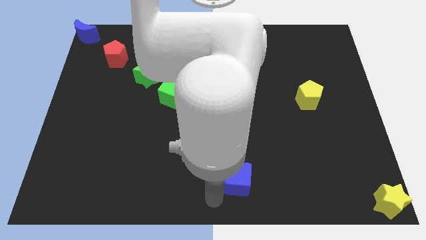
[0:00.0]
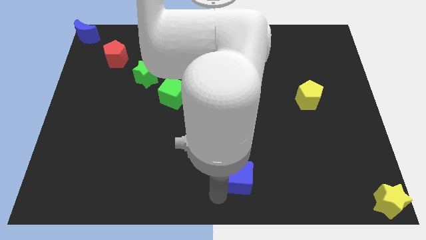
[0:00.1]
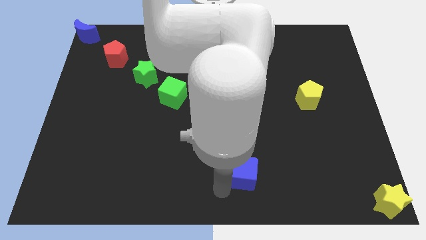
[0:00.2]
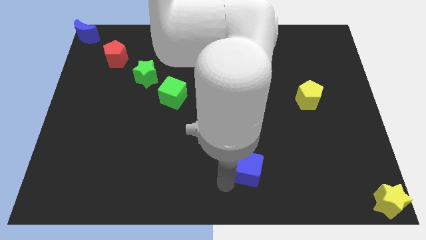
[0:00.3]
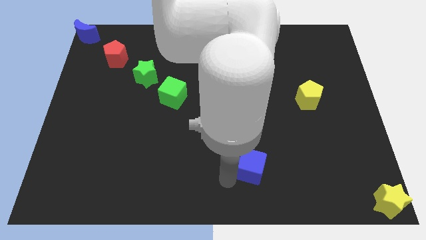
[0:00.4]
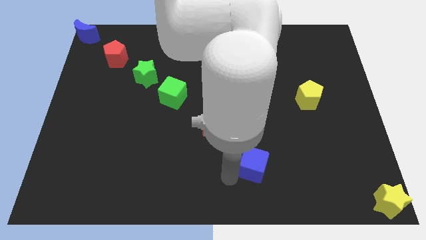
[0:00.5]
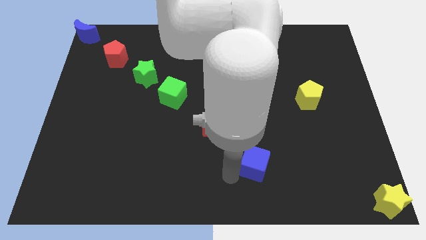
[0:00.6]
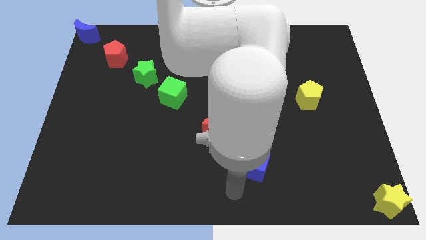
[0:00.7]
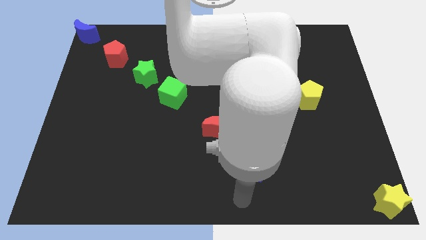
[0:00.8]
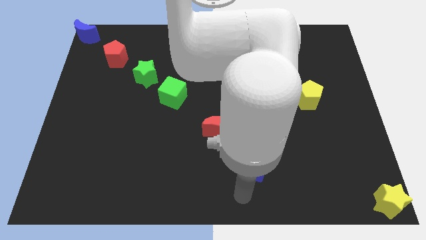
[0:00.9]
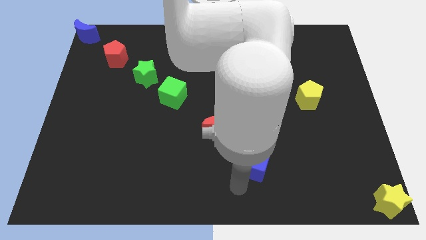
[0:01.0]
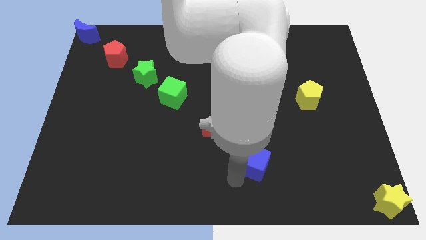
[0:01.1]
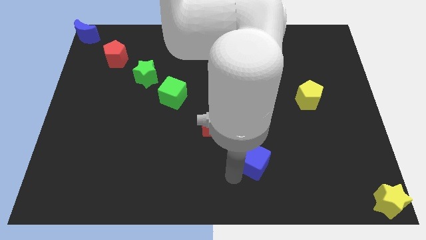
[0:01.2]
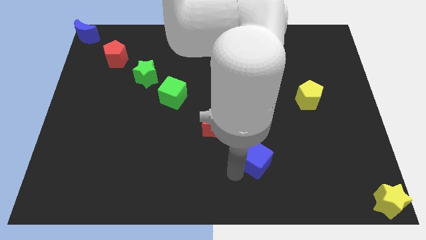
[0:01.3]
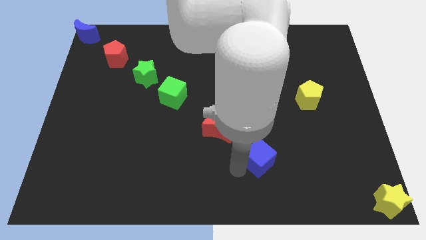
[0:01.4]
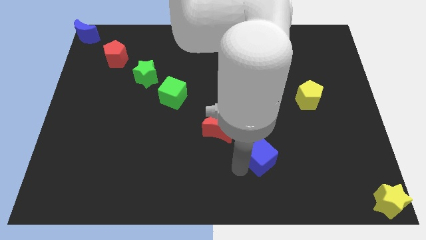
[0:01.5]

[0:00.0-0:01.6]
place blue cube a bit far from red crescent

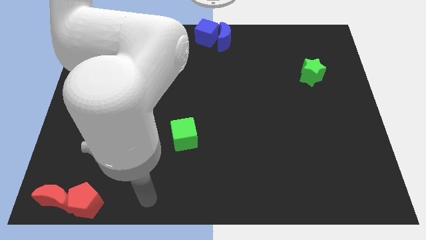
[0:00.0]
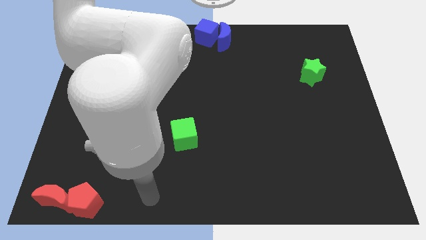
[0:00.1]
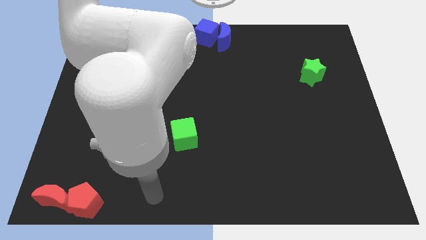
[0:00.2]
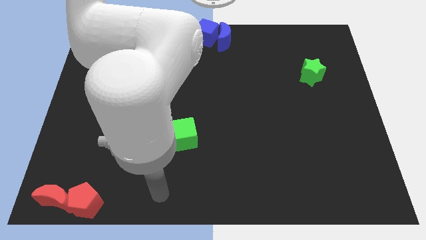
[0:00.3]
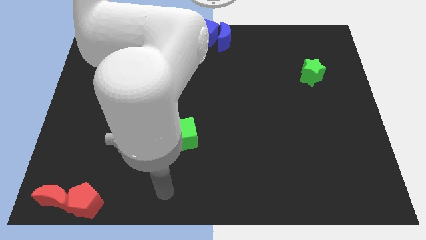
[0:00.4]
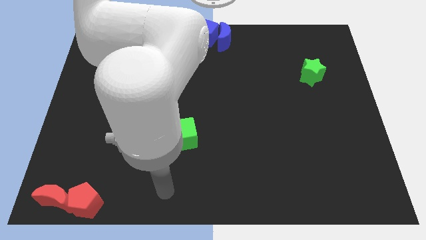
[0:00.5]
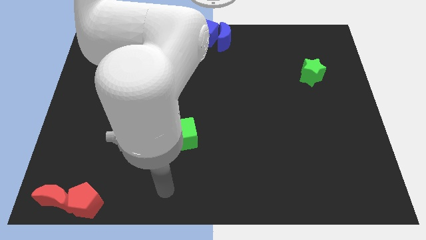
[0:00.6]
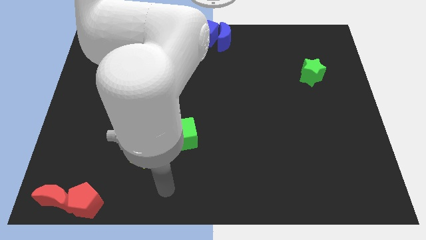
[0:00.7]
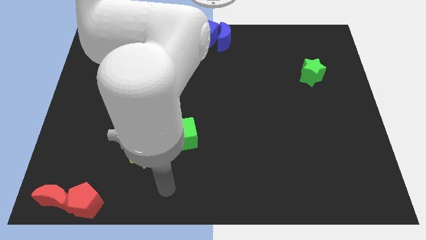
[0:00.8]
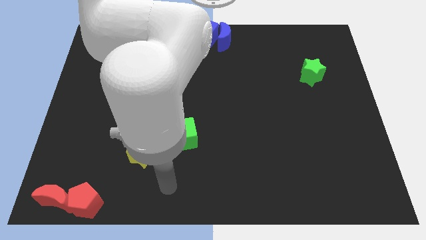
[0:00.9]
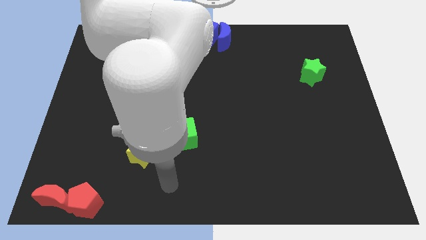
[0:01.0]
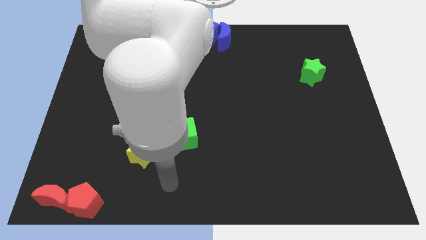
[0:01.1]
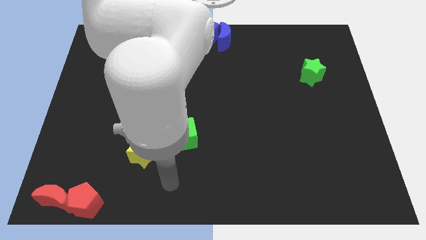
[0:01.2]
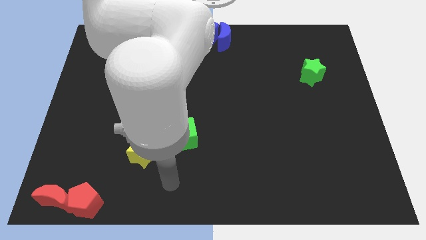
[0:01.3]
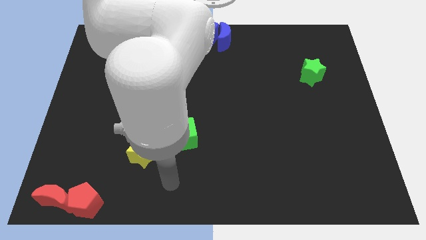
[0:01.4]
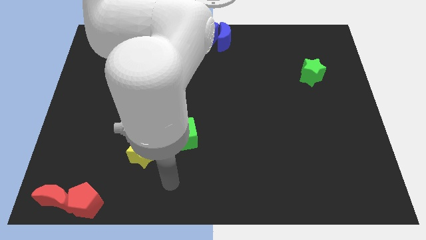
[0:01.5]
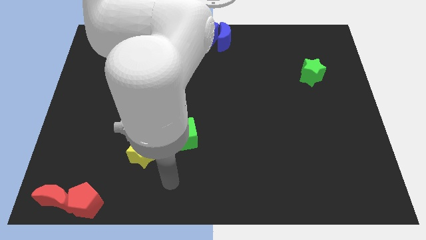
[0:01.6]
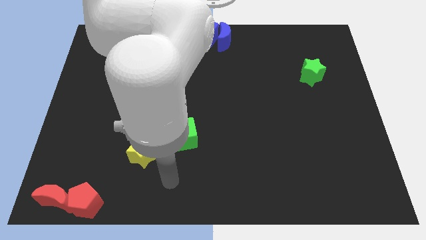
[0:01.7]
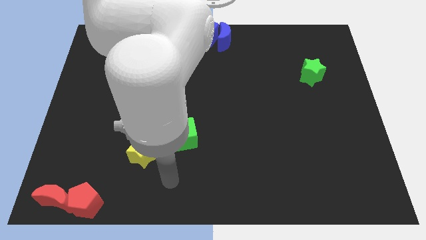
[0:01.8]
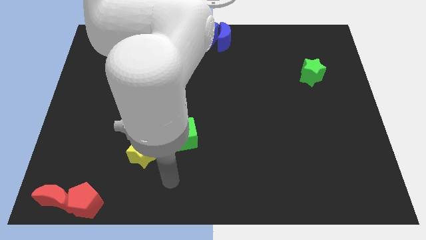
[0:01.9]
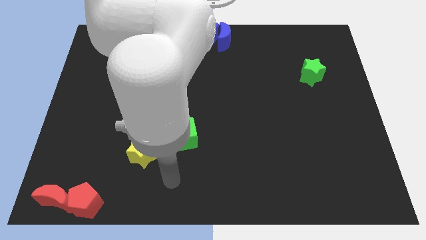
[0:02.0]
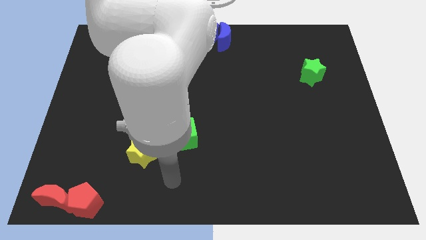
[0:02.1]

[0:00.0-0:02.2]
point your arm between green cube and yellow star

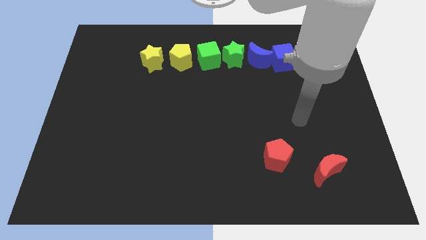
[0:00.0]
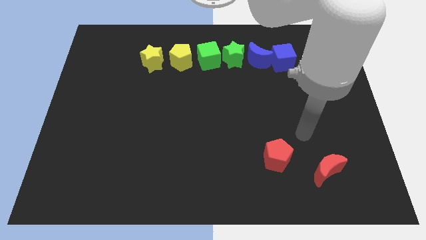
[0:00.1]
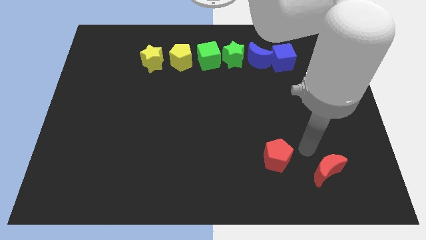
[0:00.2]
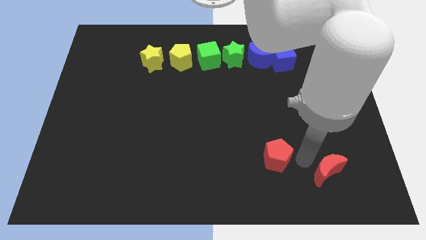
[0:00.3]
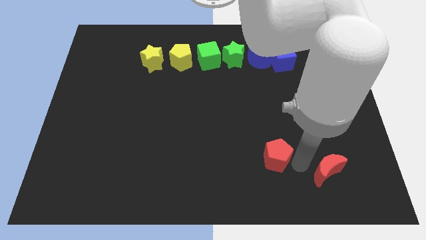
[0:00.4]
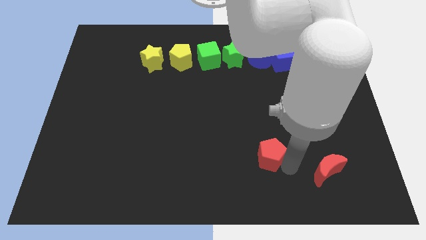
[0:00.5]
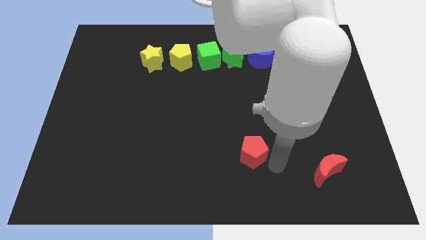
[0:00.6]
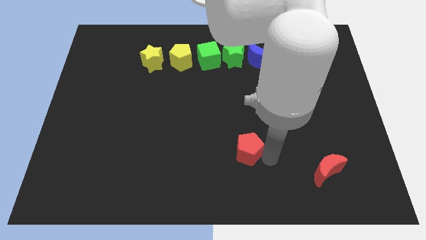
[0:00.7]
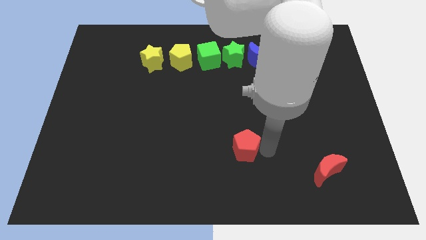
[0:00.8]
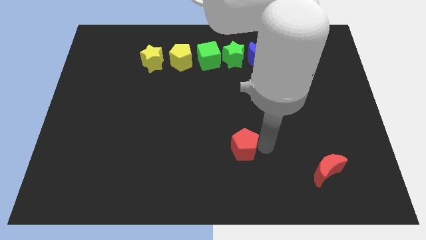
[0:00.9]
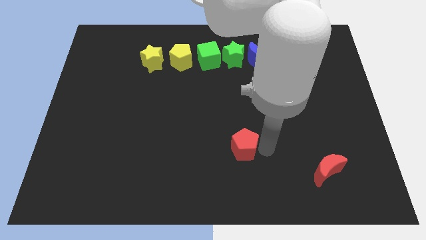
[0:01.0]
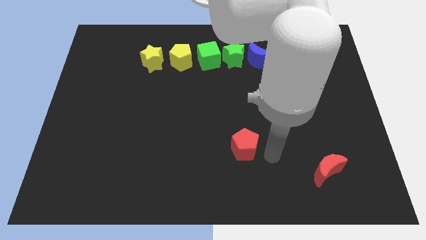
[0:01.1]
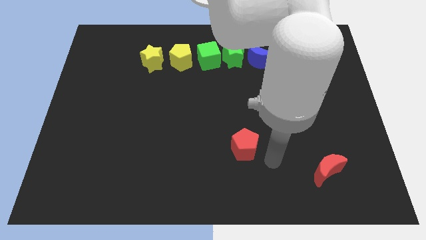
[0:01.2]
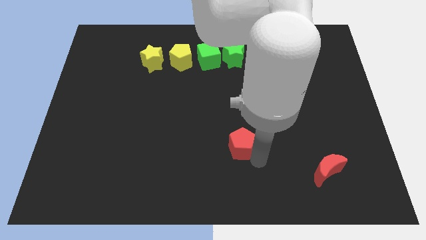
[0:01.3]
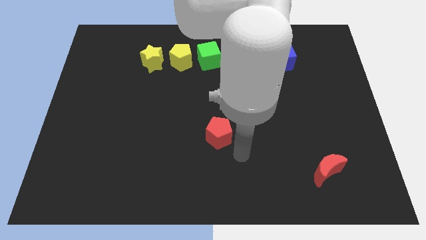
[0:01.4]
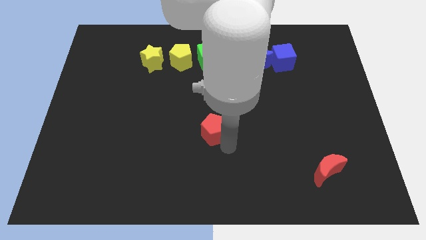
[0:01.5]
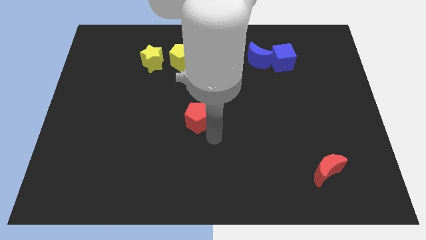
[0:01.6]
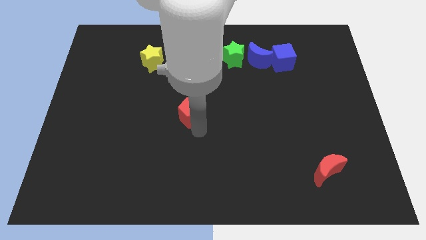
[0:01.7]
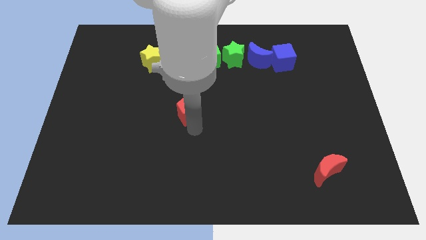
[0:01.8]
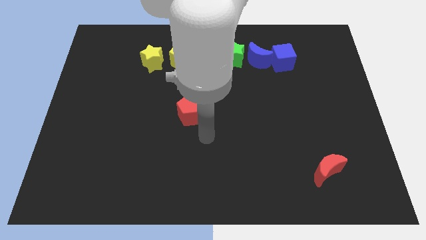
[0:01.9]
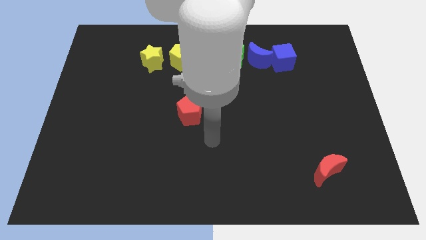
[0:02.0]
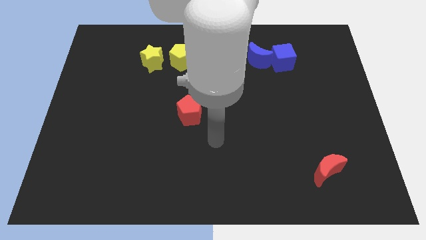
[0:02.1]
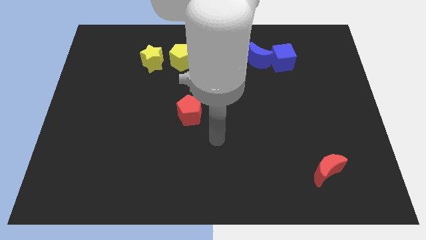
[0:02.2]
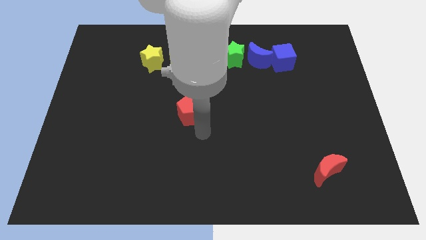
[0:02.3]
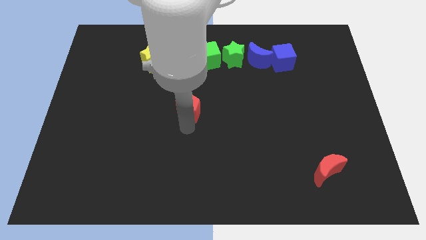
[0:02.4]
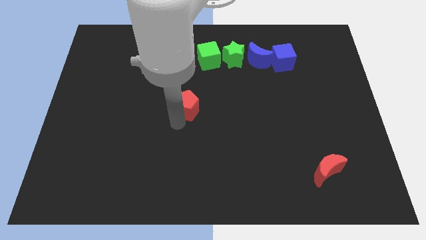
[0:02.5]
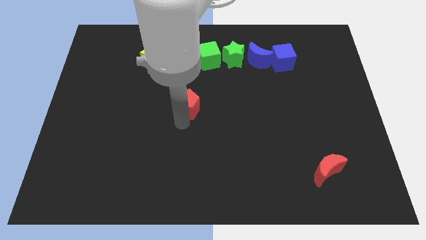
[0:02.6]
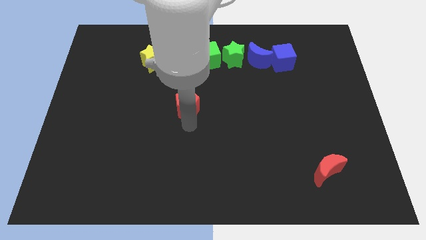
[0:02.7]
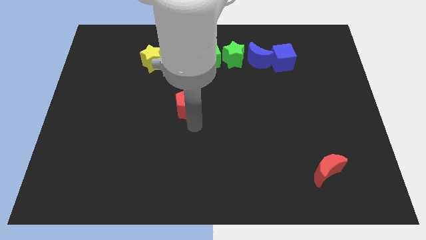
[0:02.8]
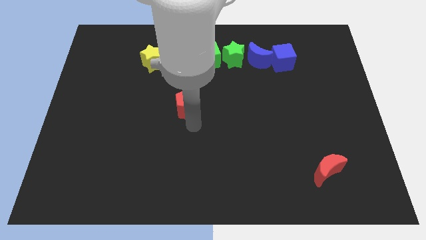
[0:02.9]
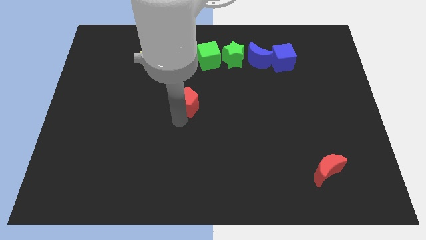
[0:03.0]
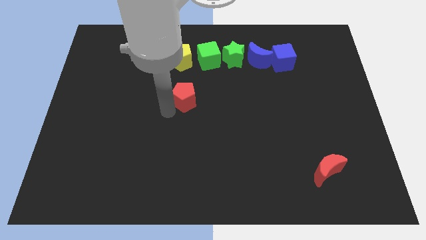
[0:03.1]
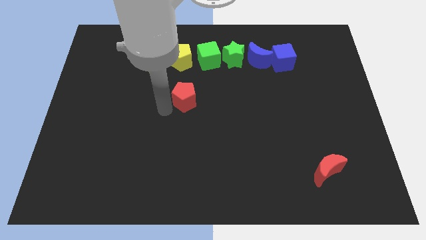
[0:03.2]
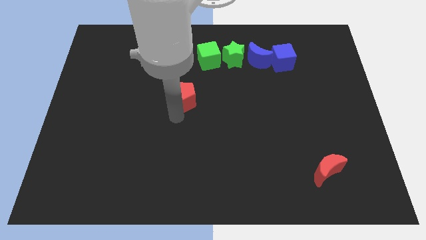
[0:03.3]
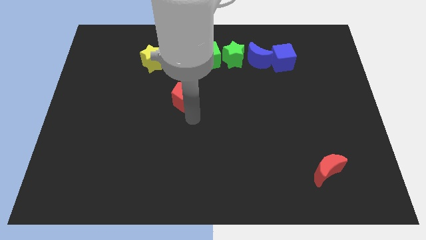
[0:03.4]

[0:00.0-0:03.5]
move red pentagon towards the bottom of the yellow pentagon

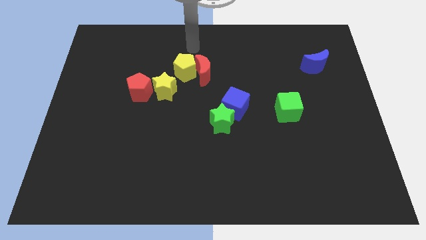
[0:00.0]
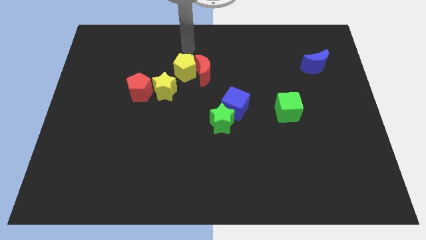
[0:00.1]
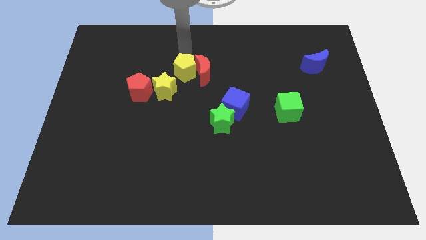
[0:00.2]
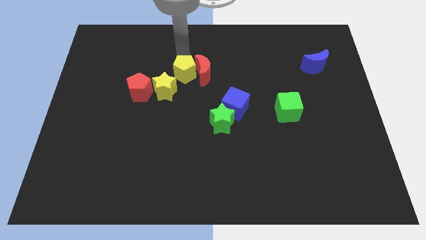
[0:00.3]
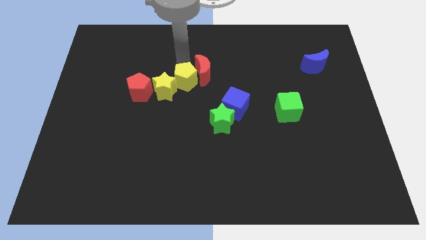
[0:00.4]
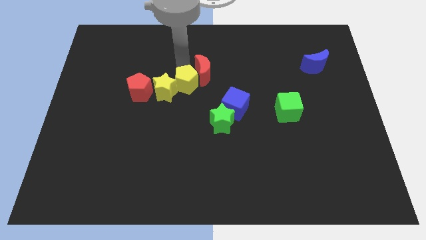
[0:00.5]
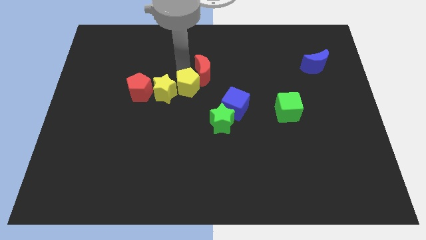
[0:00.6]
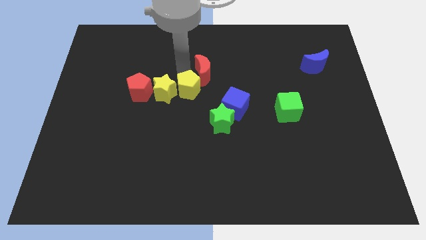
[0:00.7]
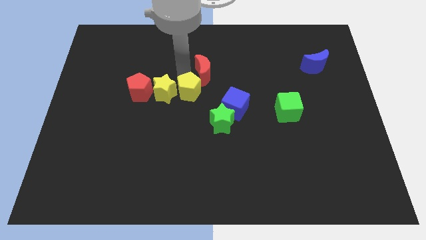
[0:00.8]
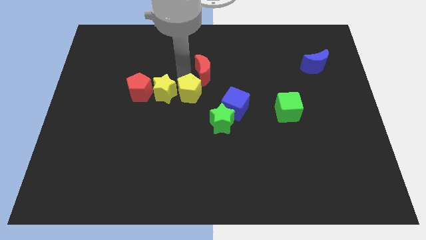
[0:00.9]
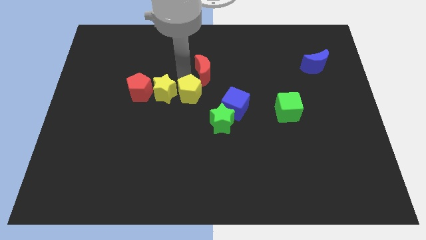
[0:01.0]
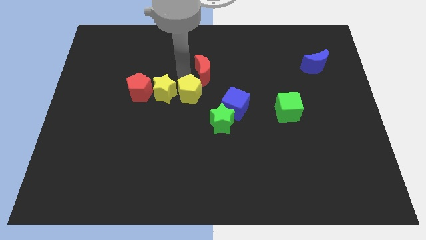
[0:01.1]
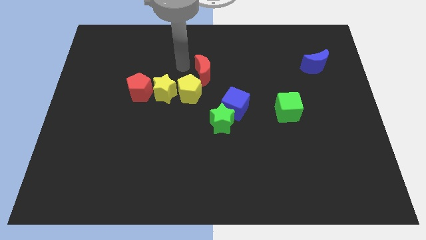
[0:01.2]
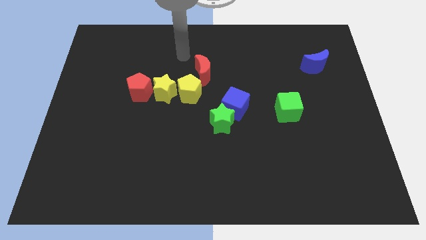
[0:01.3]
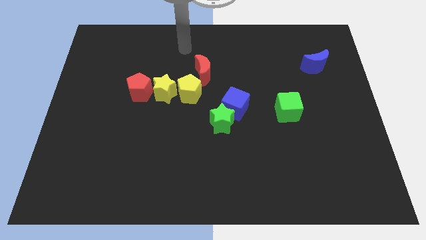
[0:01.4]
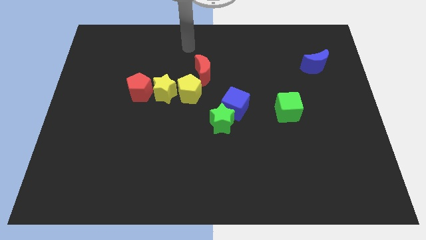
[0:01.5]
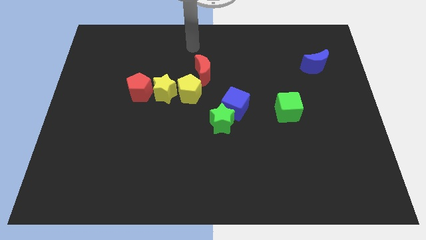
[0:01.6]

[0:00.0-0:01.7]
place the yellow pentagon to the right side of the yellow star

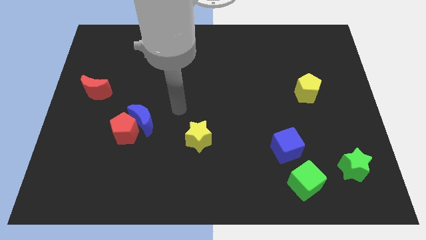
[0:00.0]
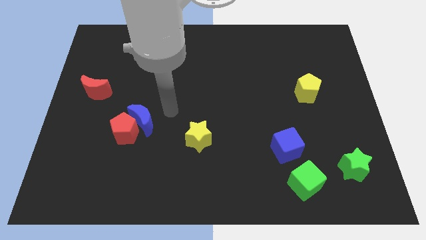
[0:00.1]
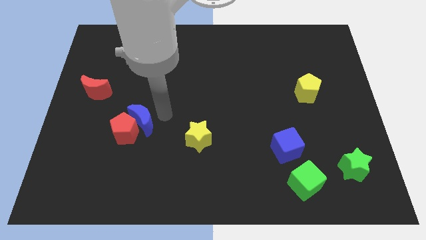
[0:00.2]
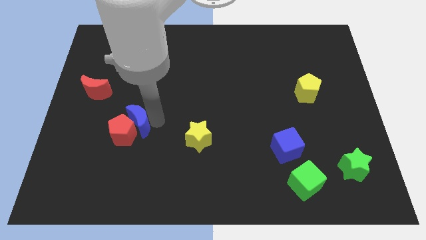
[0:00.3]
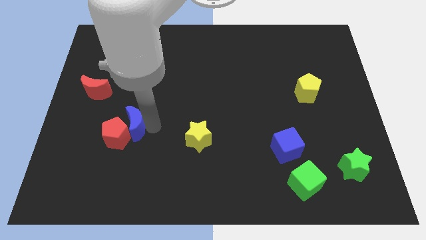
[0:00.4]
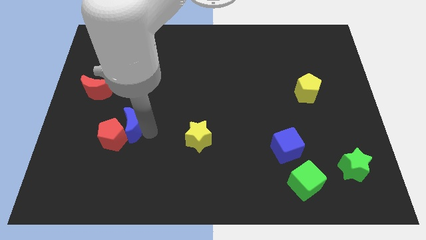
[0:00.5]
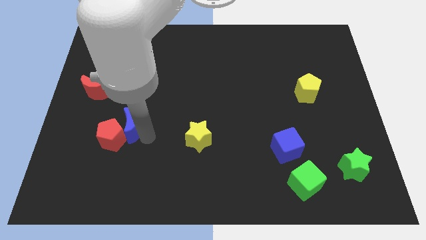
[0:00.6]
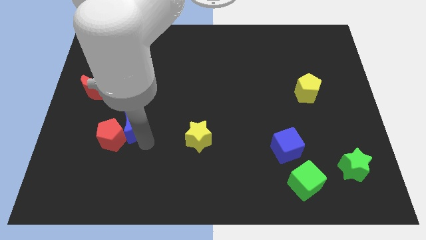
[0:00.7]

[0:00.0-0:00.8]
move blue moon into red pentagon
